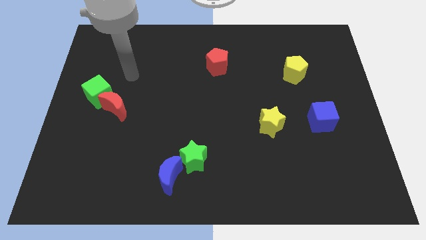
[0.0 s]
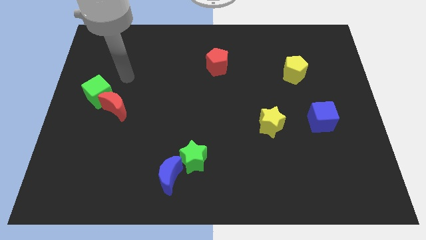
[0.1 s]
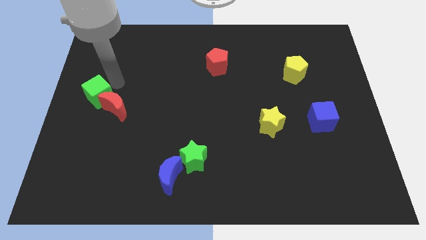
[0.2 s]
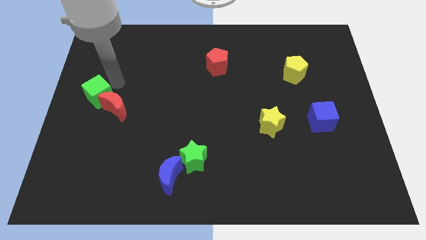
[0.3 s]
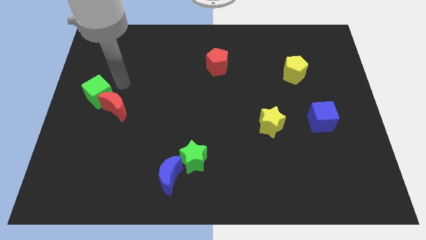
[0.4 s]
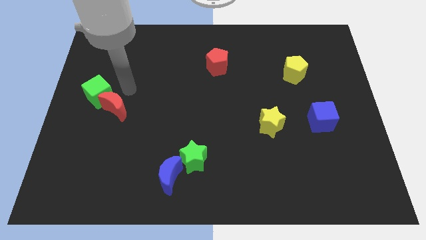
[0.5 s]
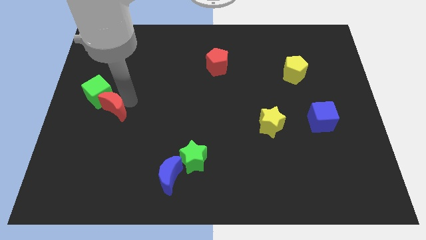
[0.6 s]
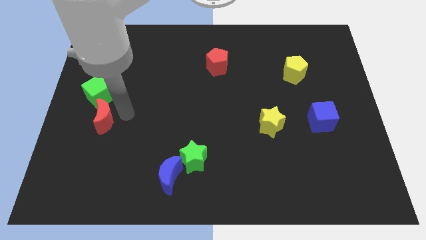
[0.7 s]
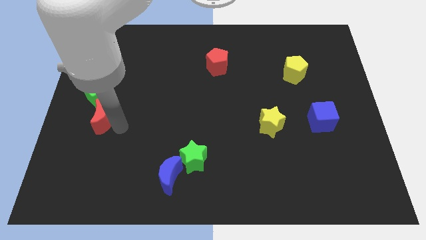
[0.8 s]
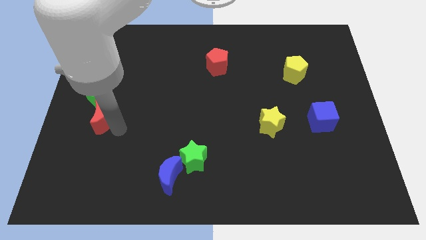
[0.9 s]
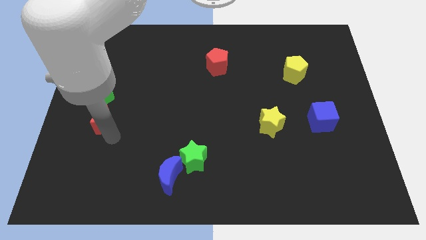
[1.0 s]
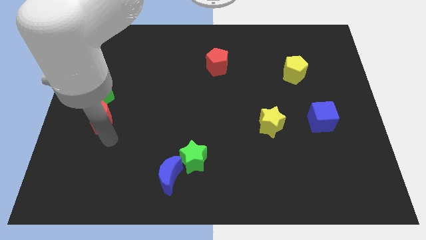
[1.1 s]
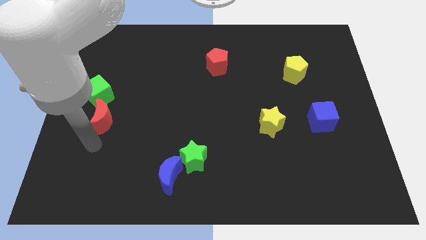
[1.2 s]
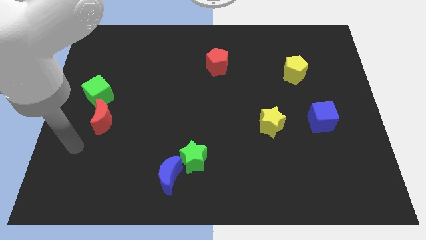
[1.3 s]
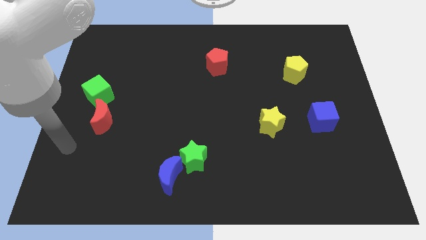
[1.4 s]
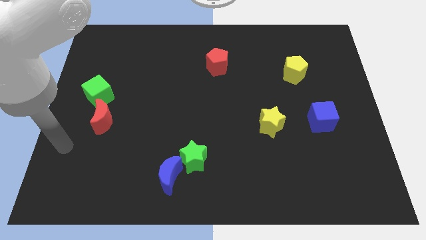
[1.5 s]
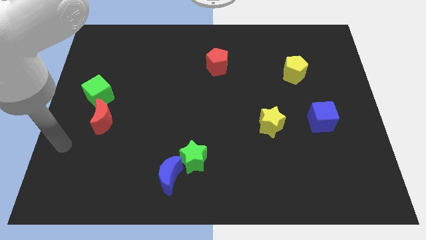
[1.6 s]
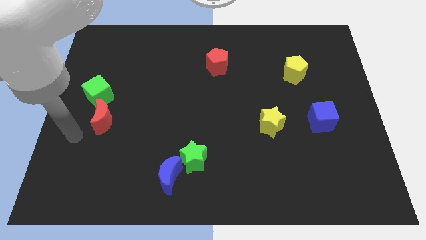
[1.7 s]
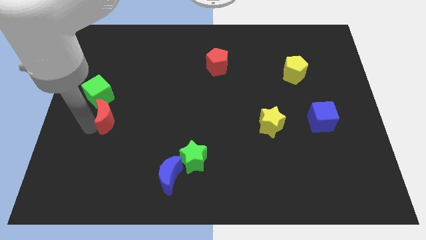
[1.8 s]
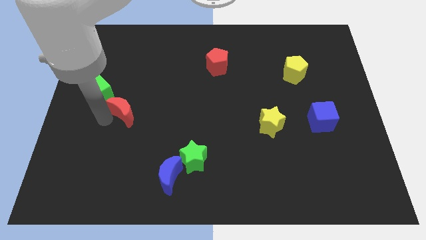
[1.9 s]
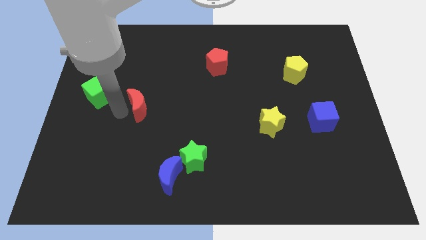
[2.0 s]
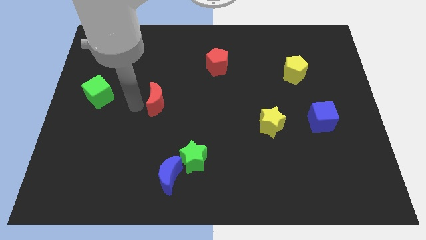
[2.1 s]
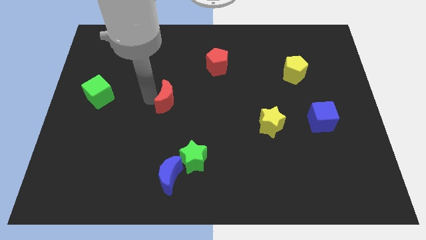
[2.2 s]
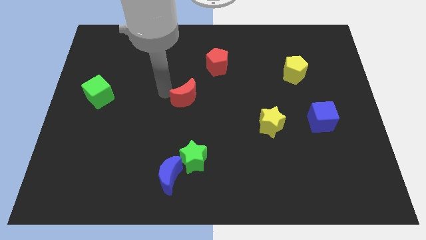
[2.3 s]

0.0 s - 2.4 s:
move the red crescent close towards the red pentagon

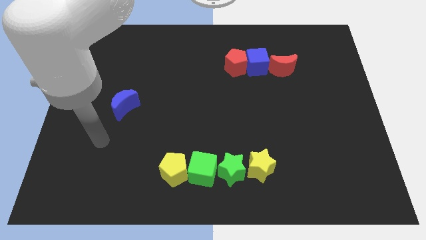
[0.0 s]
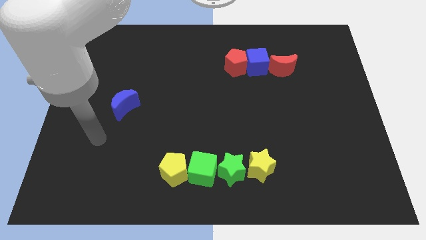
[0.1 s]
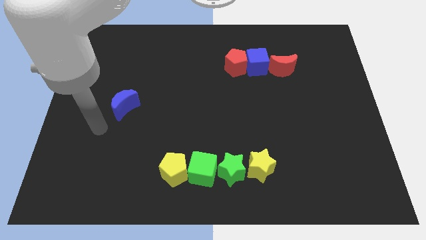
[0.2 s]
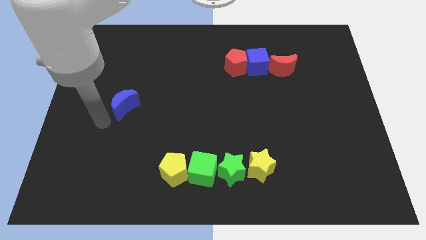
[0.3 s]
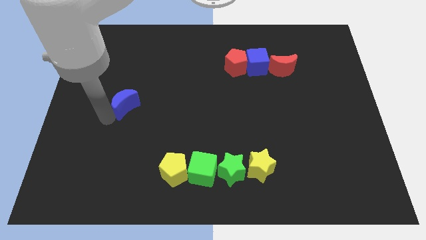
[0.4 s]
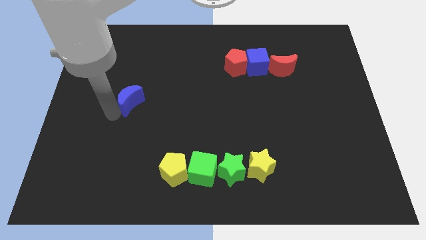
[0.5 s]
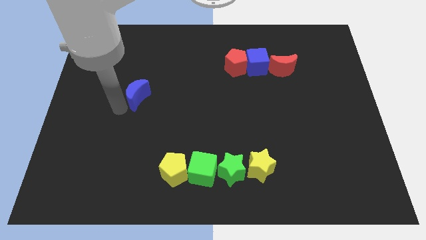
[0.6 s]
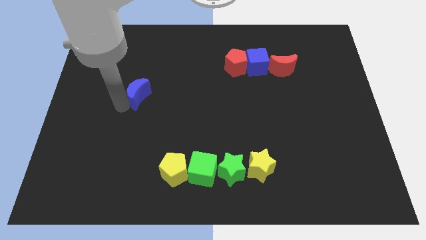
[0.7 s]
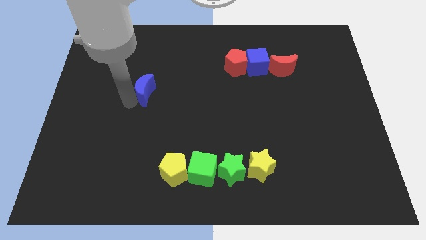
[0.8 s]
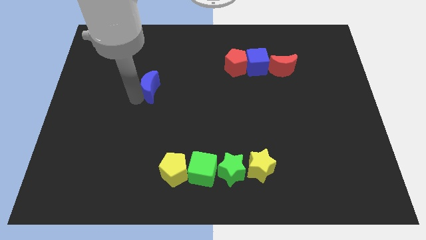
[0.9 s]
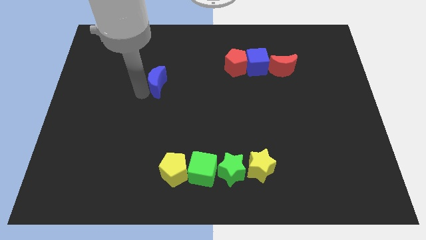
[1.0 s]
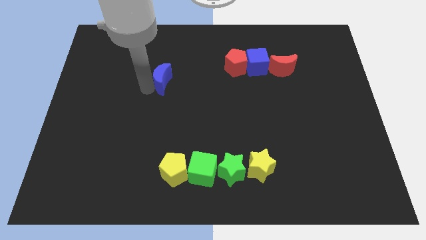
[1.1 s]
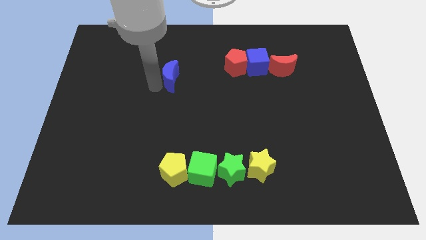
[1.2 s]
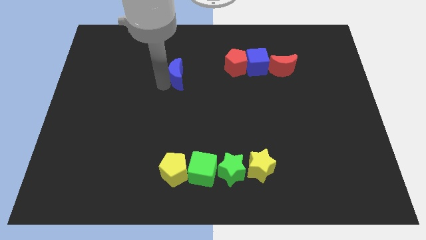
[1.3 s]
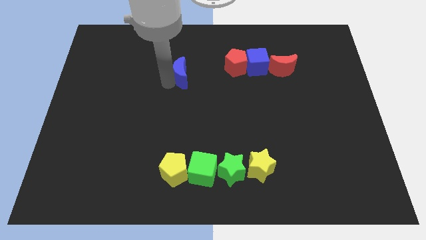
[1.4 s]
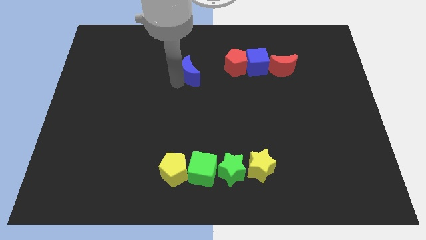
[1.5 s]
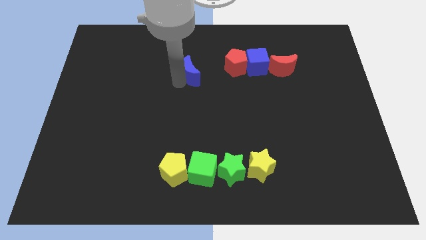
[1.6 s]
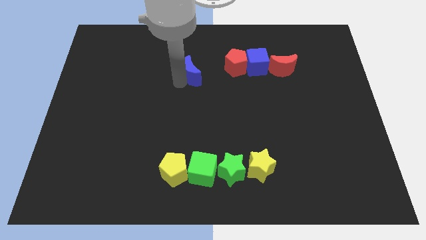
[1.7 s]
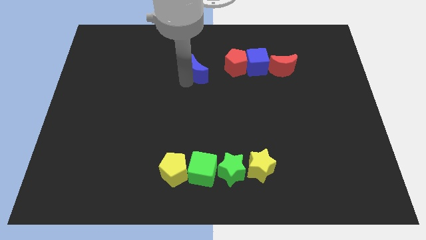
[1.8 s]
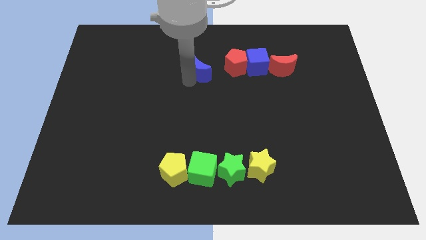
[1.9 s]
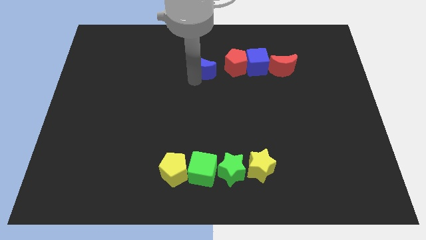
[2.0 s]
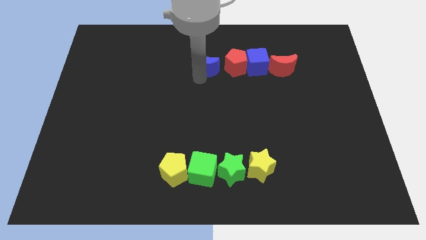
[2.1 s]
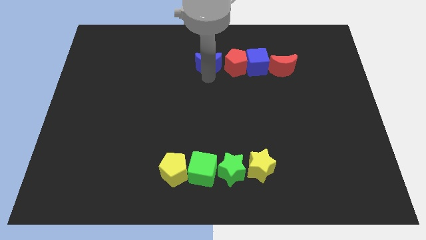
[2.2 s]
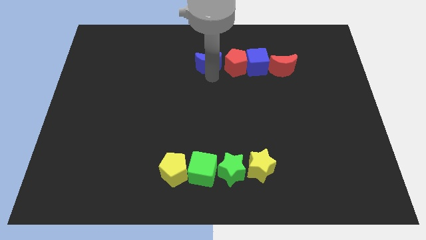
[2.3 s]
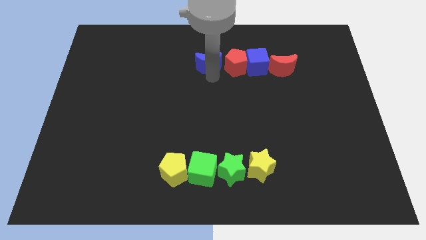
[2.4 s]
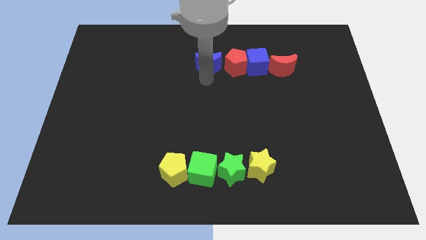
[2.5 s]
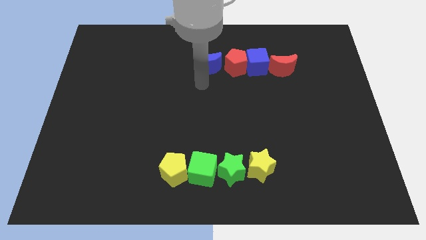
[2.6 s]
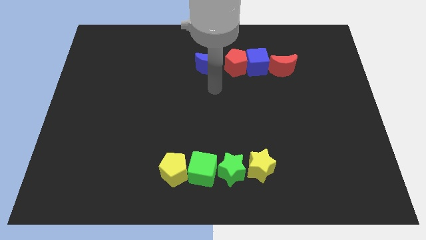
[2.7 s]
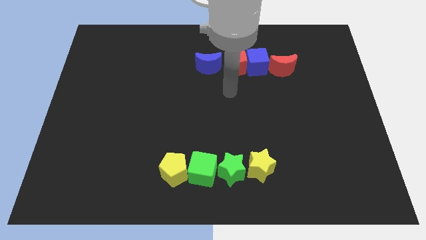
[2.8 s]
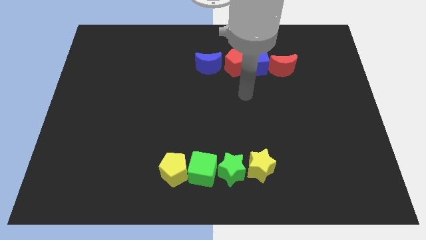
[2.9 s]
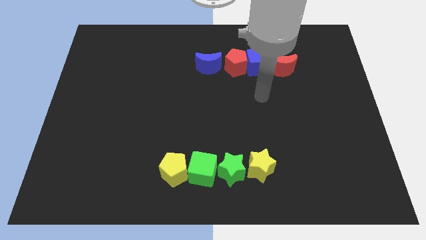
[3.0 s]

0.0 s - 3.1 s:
place the blue moon left to the red pentagon

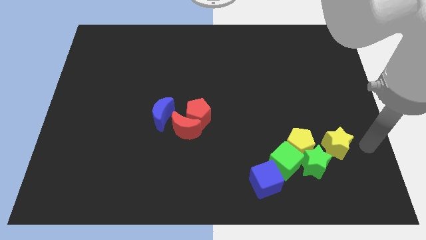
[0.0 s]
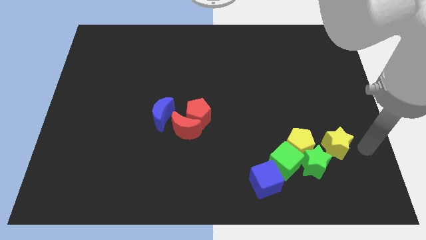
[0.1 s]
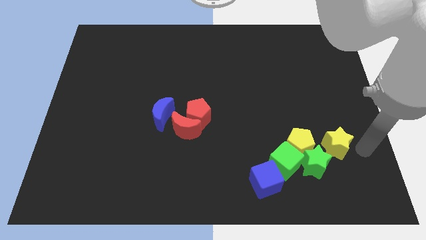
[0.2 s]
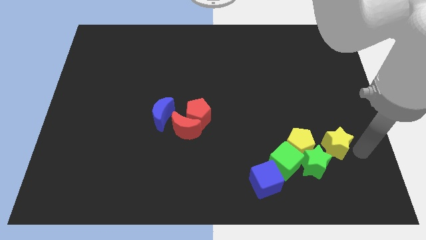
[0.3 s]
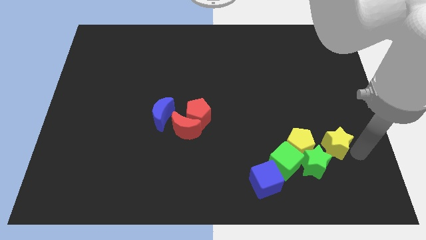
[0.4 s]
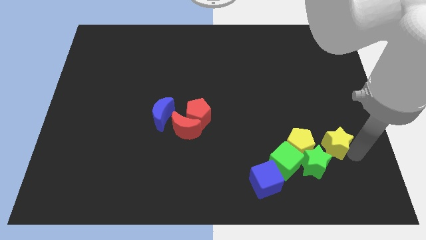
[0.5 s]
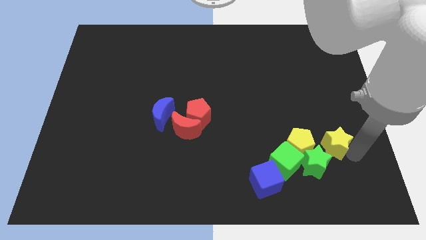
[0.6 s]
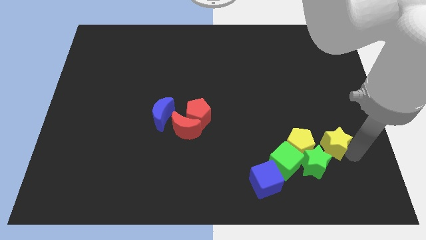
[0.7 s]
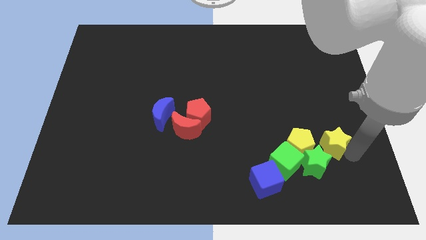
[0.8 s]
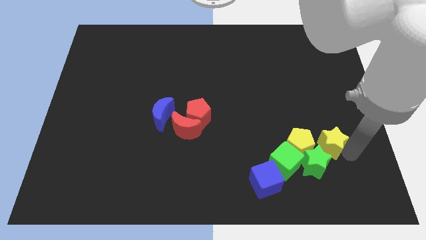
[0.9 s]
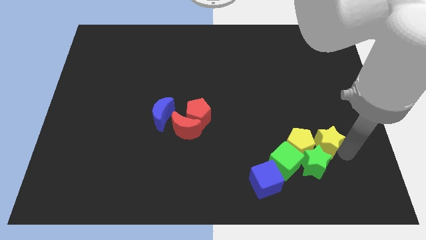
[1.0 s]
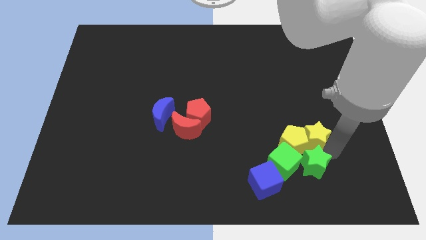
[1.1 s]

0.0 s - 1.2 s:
slide the yellow star into the right side of the yellow pentagon

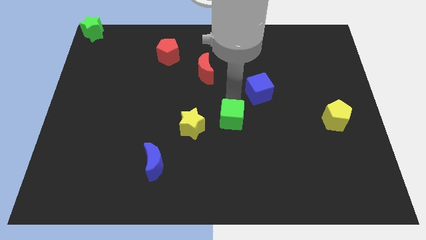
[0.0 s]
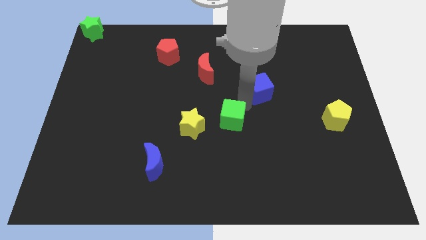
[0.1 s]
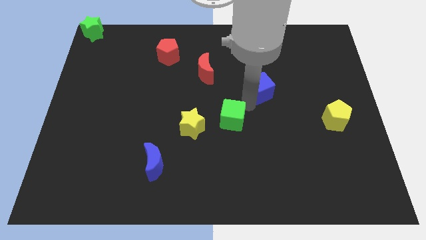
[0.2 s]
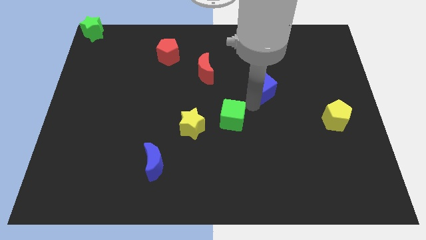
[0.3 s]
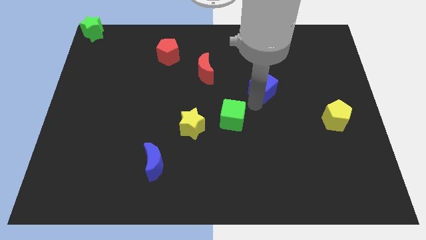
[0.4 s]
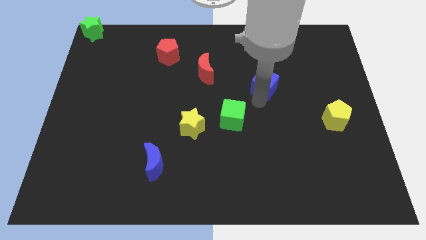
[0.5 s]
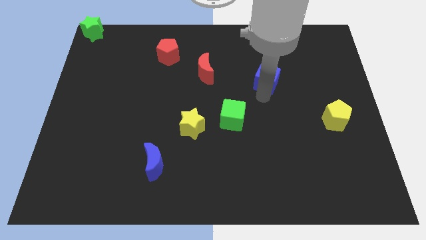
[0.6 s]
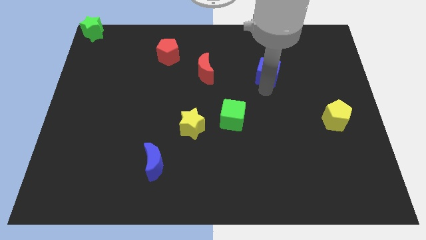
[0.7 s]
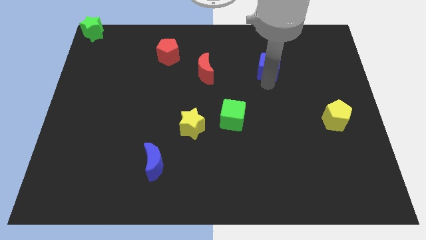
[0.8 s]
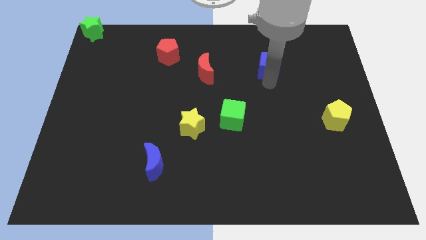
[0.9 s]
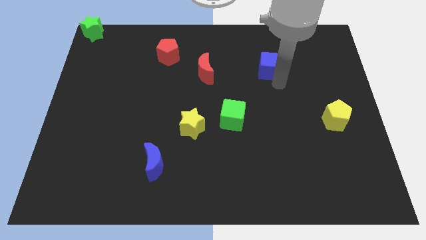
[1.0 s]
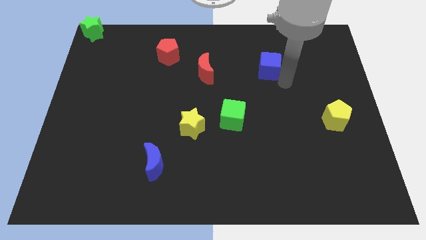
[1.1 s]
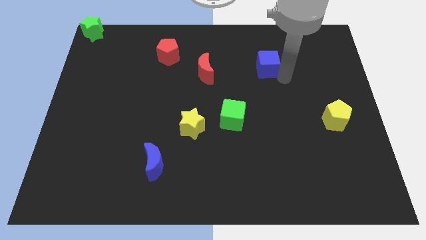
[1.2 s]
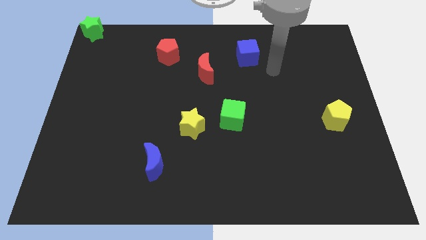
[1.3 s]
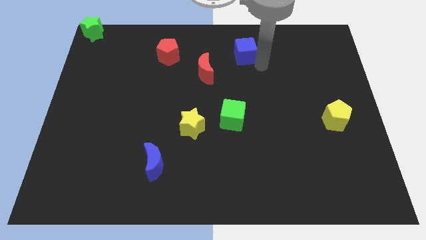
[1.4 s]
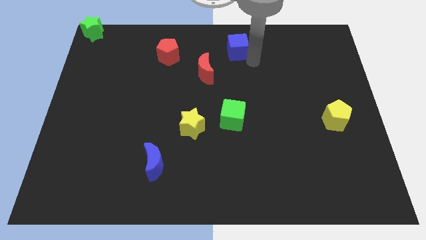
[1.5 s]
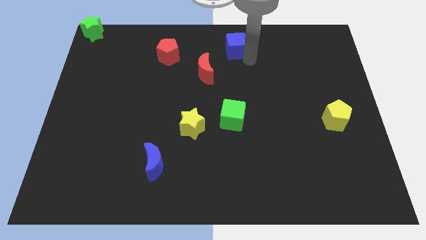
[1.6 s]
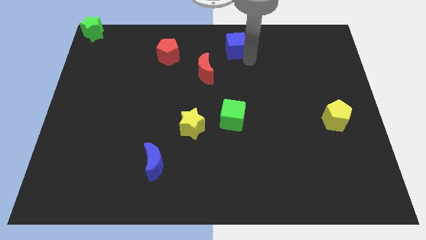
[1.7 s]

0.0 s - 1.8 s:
move blue cube upwards

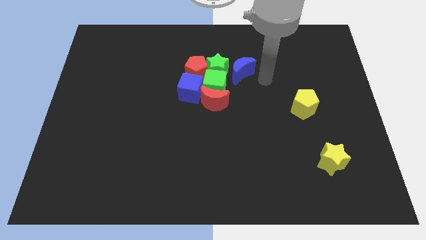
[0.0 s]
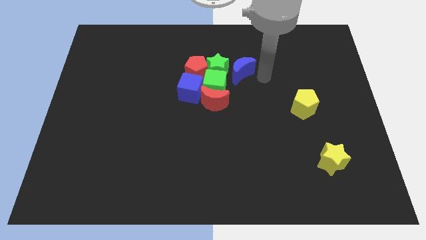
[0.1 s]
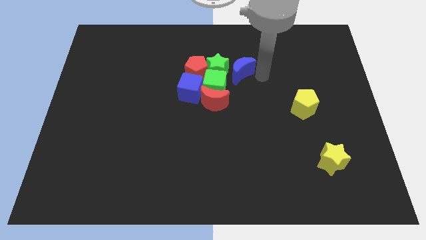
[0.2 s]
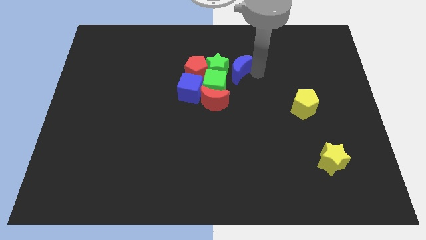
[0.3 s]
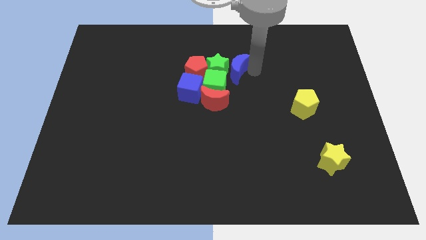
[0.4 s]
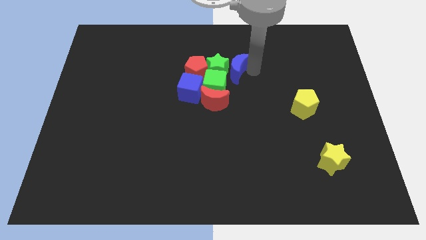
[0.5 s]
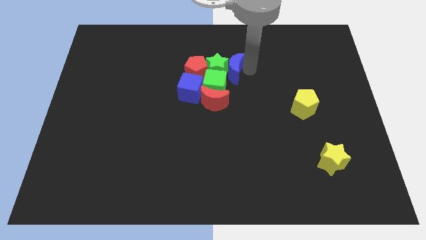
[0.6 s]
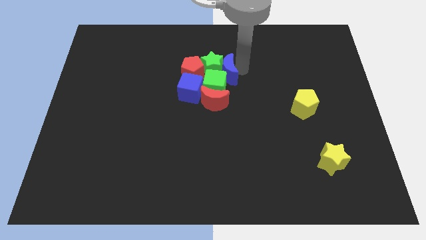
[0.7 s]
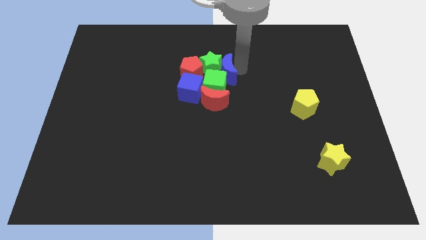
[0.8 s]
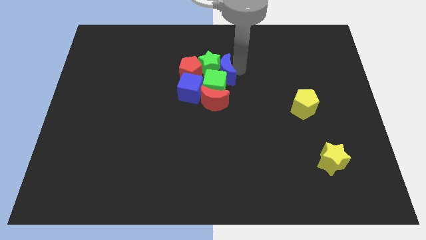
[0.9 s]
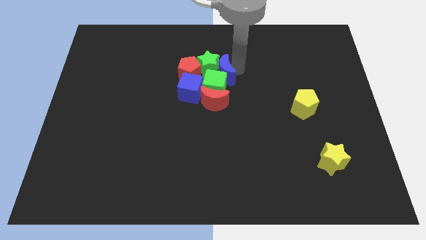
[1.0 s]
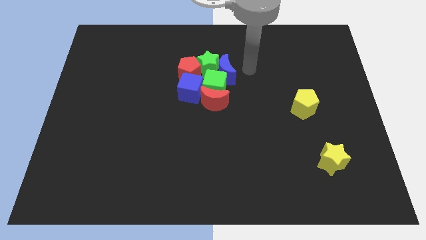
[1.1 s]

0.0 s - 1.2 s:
push the green cube and green star with the blue moon
